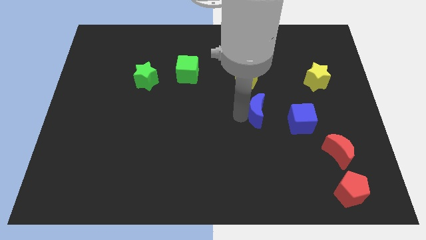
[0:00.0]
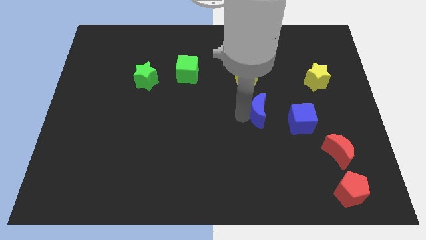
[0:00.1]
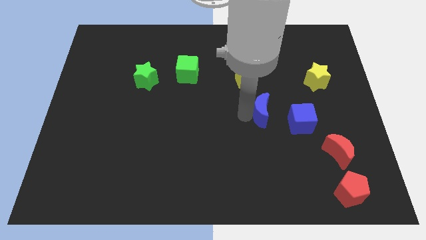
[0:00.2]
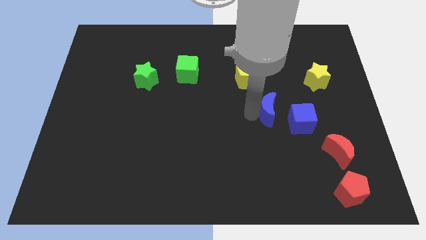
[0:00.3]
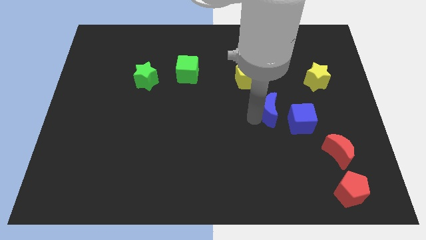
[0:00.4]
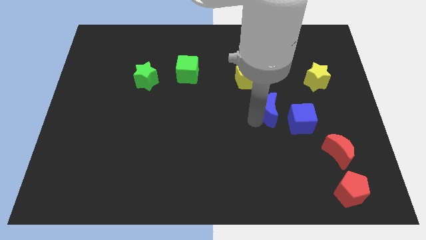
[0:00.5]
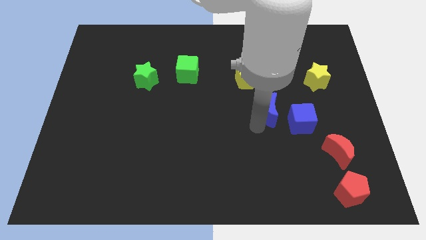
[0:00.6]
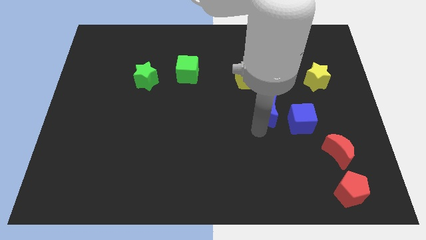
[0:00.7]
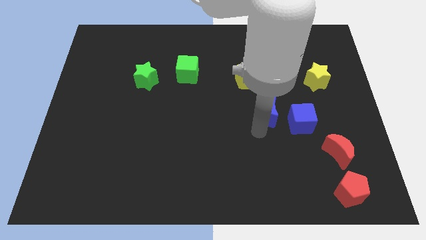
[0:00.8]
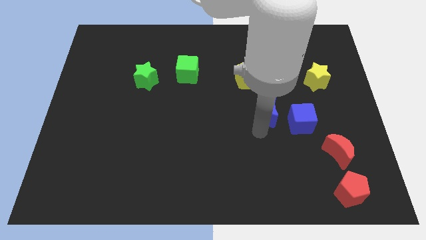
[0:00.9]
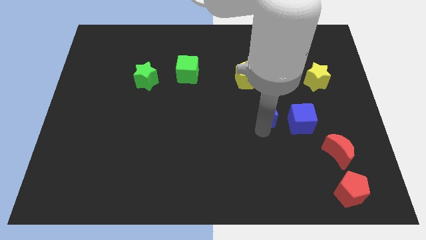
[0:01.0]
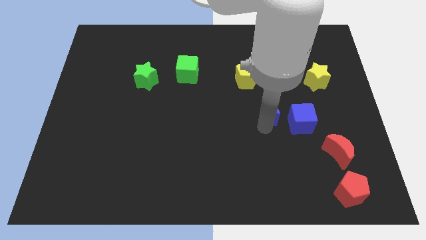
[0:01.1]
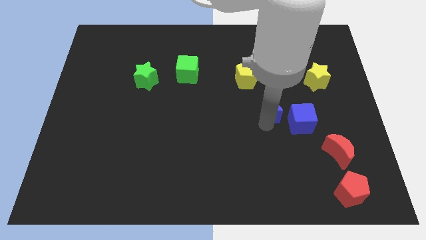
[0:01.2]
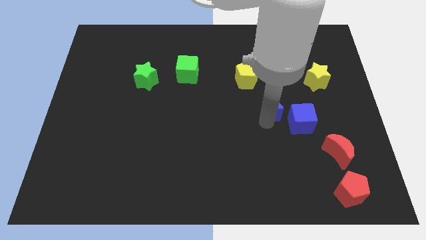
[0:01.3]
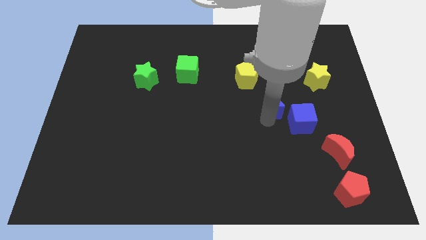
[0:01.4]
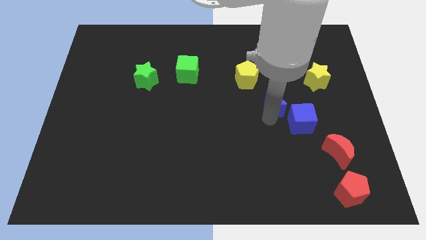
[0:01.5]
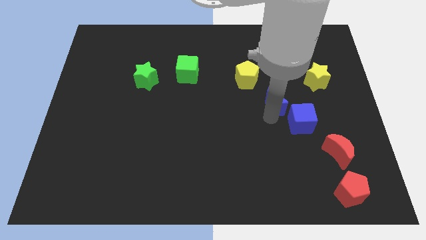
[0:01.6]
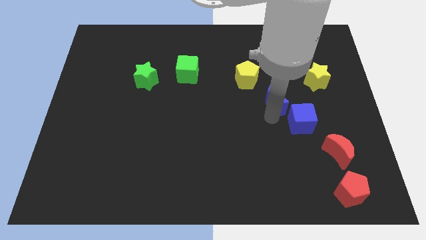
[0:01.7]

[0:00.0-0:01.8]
put the blue crescent at the top left of the blue cube

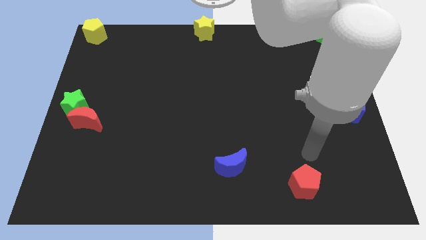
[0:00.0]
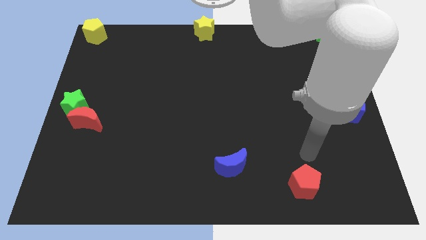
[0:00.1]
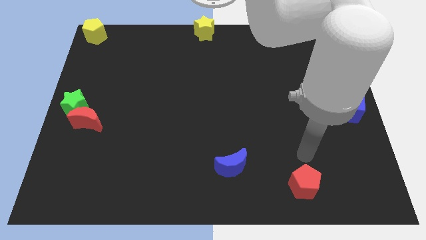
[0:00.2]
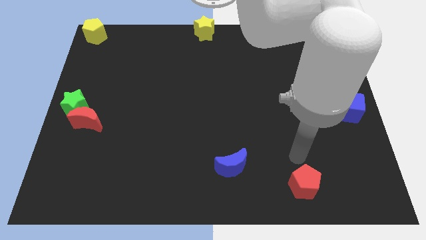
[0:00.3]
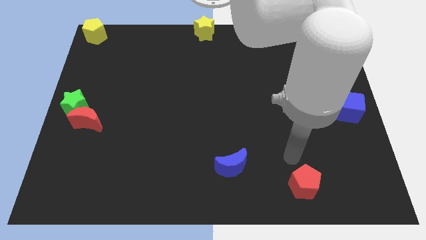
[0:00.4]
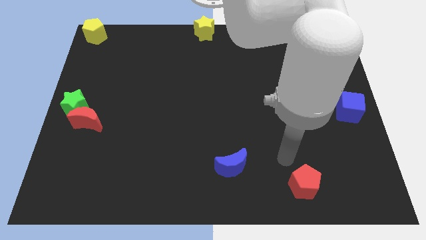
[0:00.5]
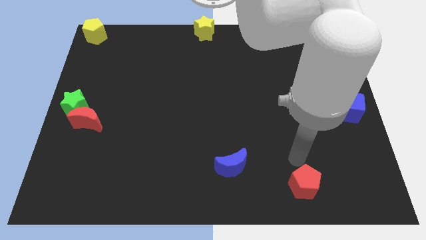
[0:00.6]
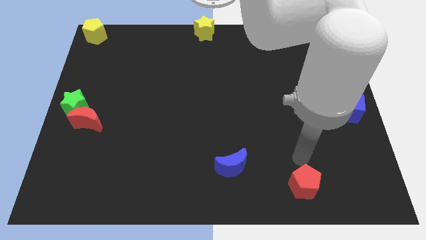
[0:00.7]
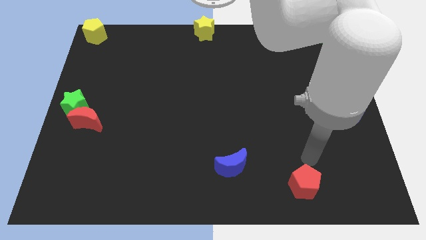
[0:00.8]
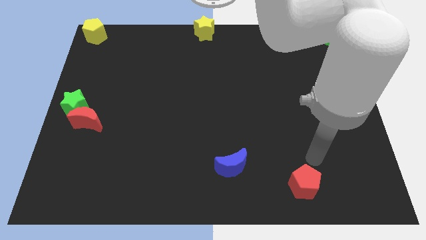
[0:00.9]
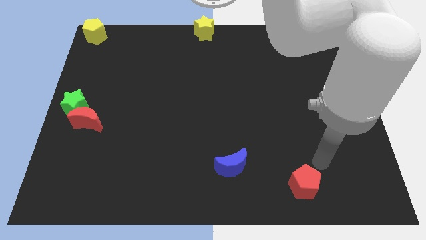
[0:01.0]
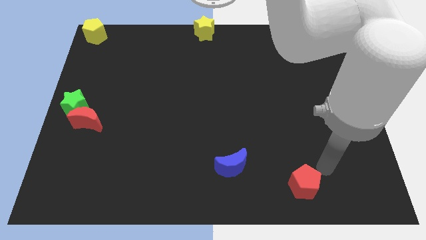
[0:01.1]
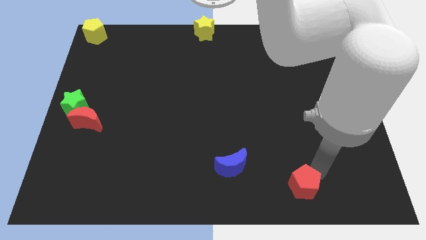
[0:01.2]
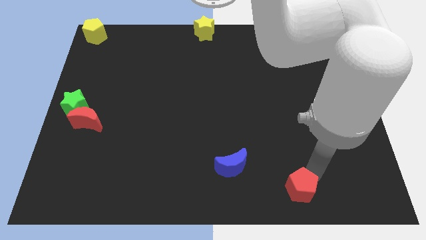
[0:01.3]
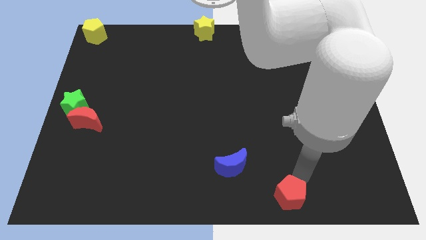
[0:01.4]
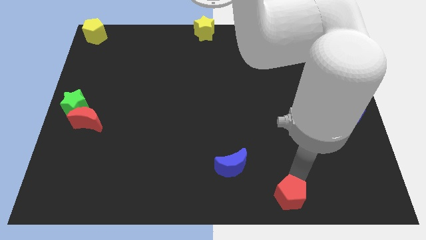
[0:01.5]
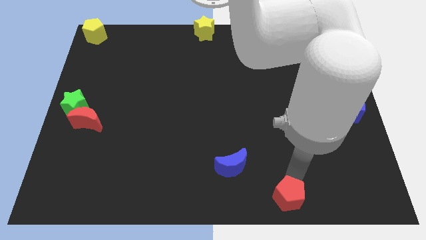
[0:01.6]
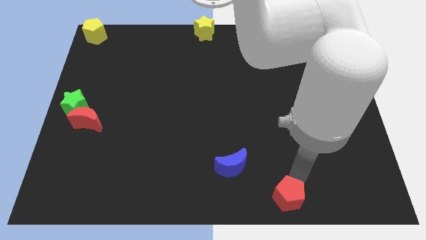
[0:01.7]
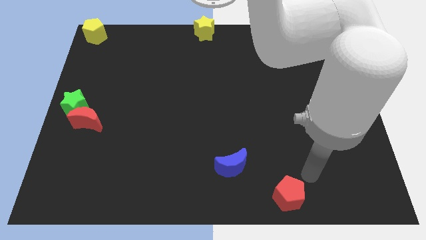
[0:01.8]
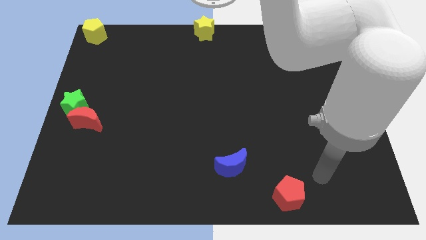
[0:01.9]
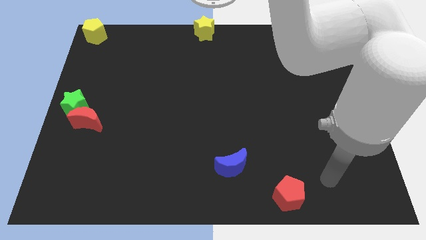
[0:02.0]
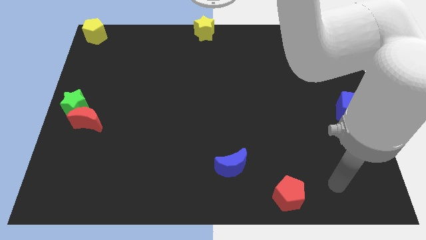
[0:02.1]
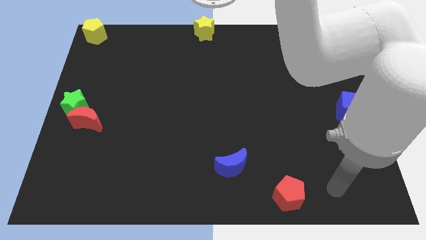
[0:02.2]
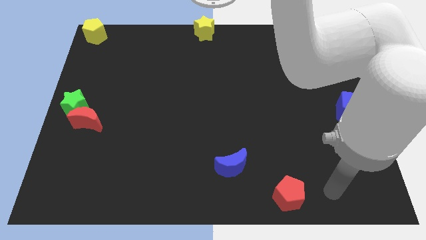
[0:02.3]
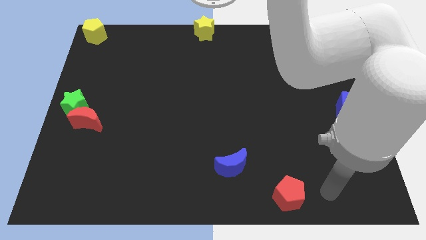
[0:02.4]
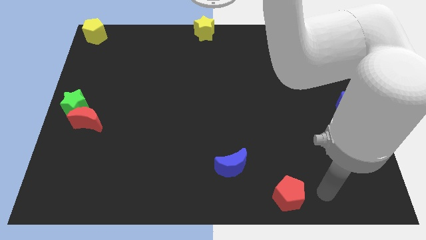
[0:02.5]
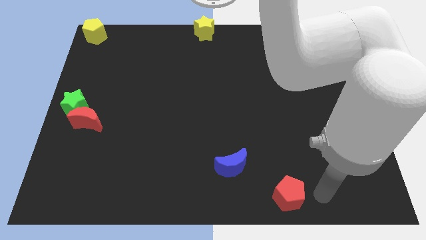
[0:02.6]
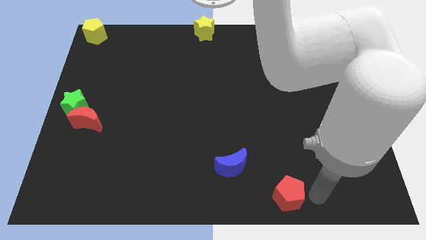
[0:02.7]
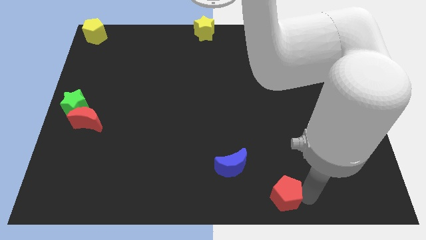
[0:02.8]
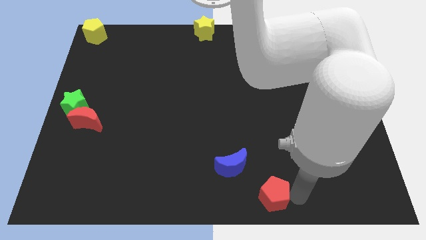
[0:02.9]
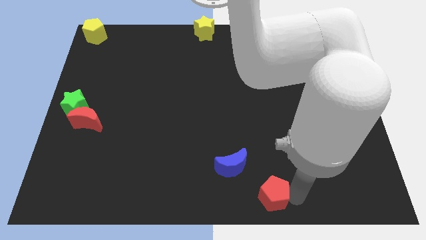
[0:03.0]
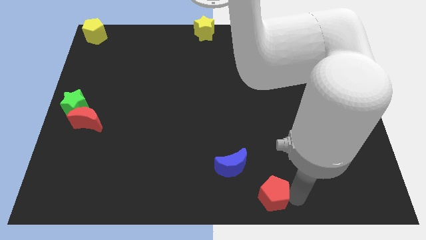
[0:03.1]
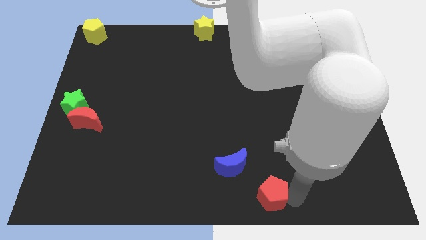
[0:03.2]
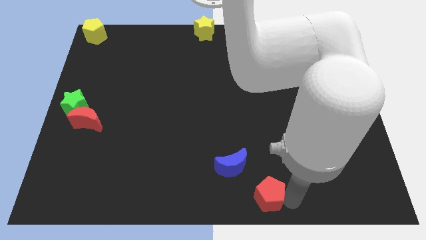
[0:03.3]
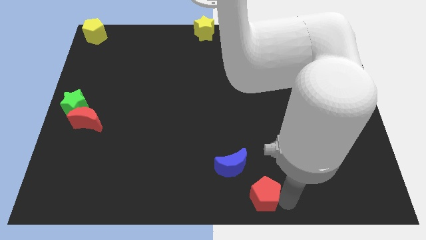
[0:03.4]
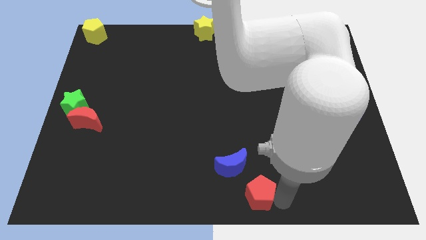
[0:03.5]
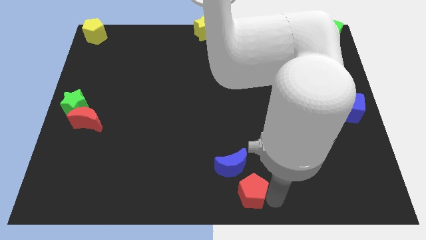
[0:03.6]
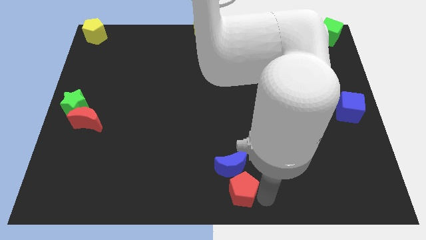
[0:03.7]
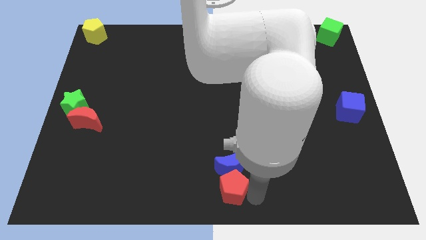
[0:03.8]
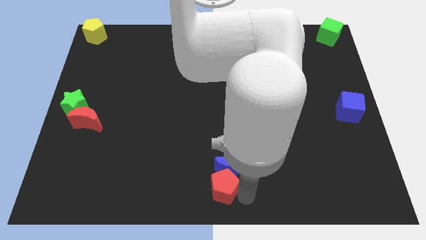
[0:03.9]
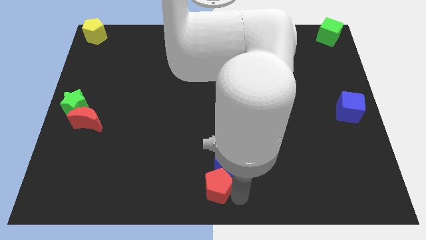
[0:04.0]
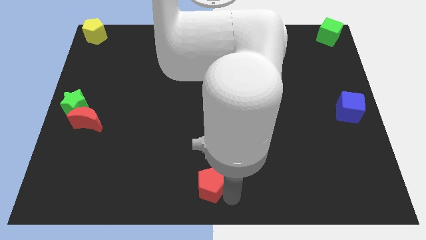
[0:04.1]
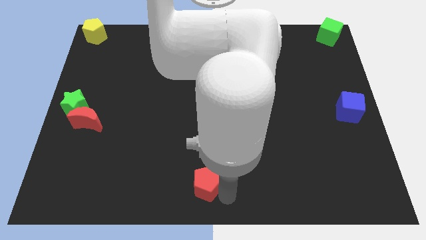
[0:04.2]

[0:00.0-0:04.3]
place the red pentagon below the red moon

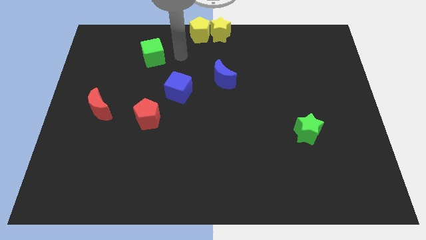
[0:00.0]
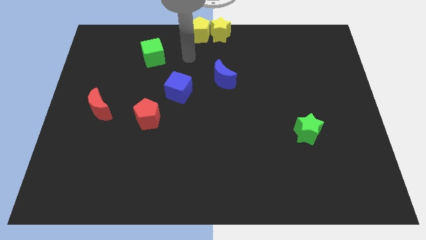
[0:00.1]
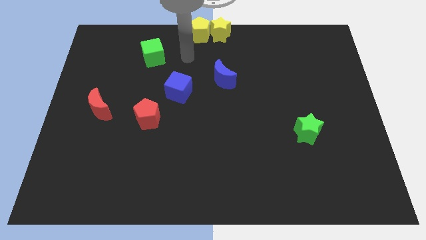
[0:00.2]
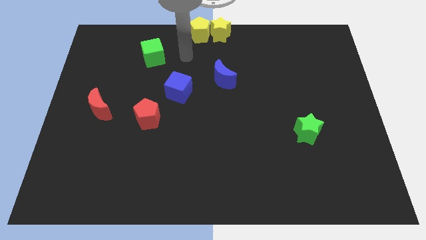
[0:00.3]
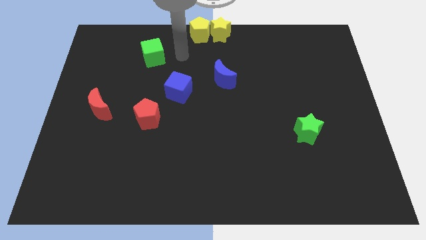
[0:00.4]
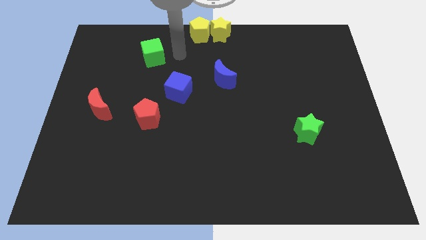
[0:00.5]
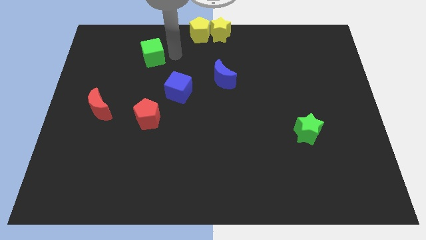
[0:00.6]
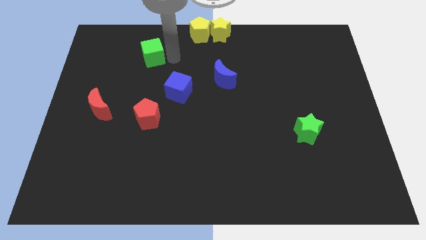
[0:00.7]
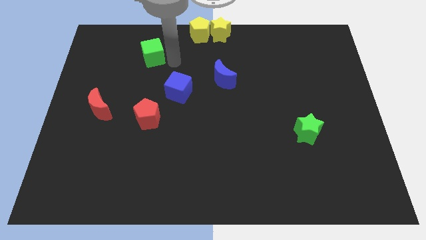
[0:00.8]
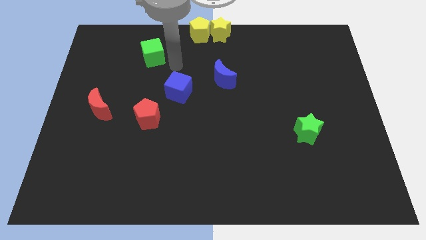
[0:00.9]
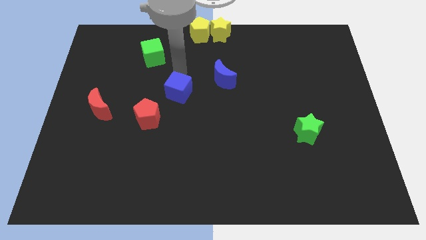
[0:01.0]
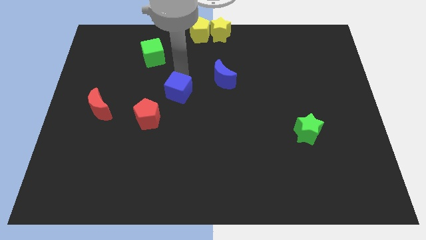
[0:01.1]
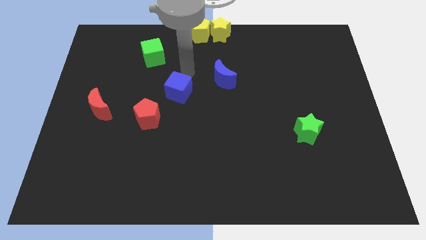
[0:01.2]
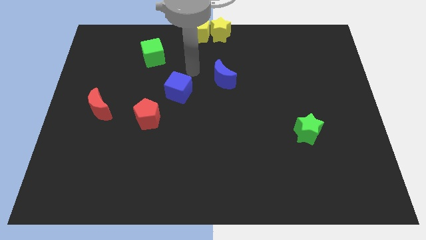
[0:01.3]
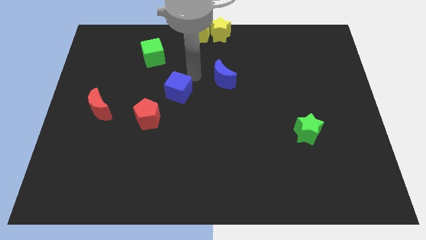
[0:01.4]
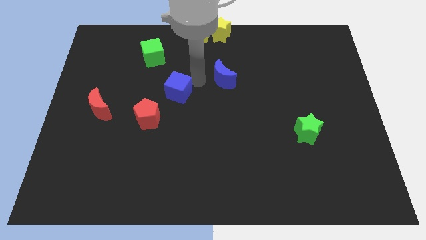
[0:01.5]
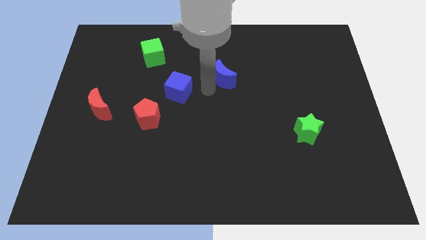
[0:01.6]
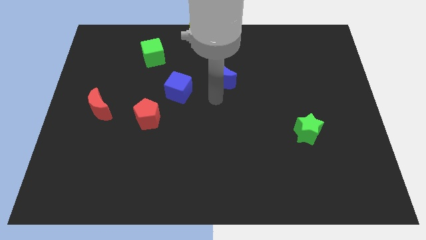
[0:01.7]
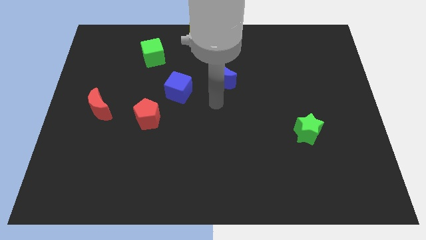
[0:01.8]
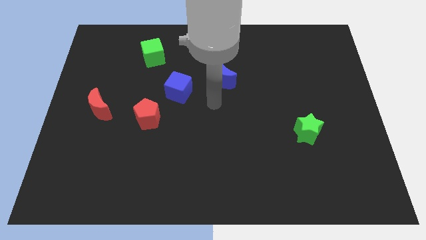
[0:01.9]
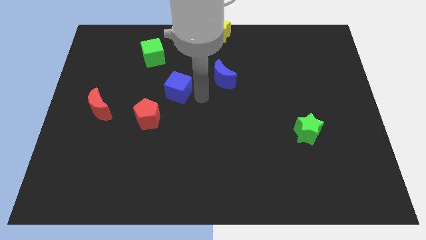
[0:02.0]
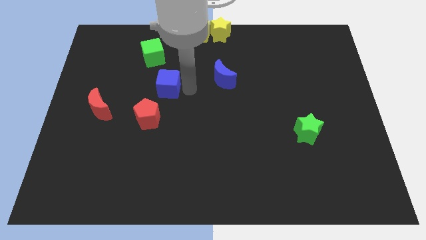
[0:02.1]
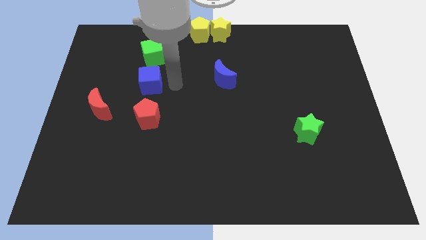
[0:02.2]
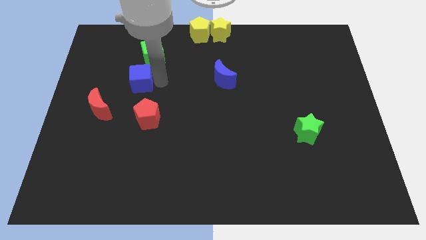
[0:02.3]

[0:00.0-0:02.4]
place the blue cube above the red pentagon

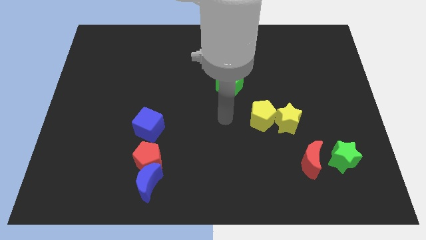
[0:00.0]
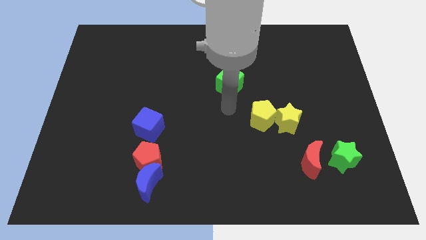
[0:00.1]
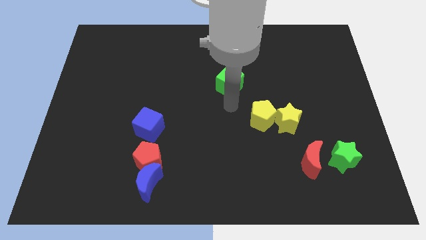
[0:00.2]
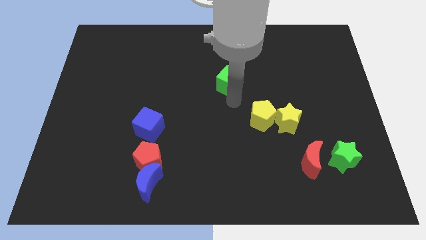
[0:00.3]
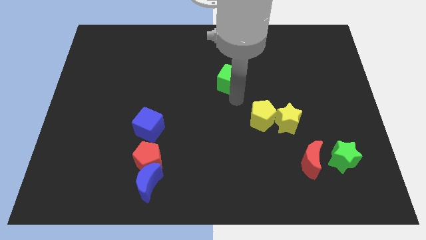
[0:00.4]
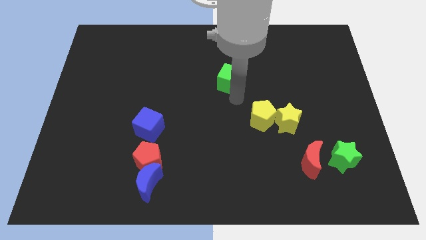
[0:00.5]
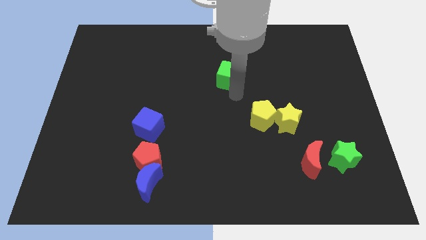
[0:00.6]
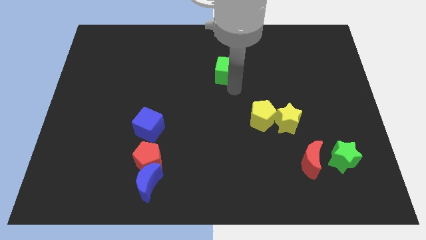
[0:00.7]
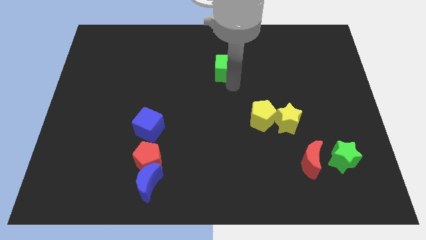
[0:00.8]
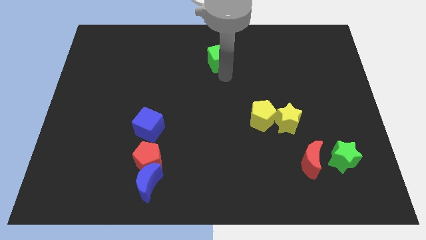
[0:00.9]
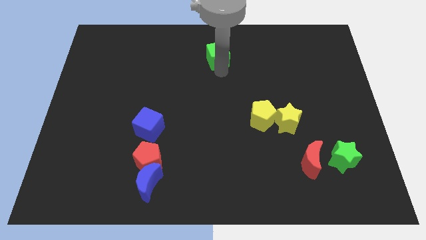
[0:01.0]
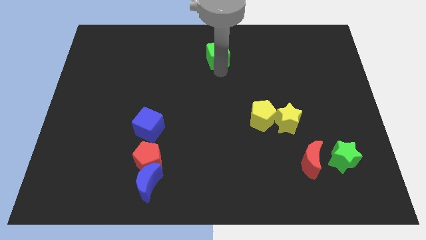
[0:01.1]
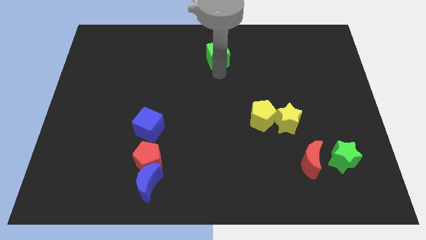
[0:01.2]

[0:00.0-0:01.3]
push the green cube upward
